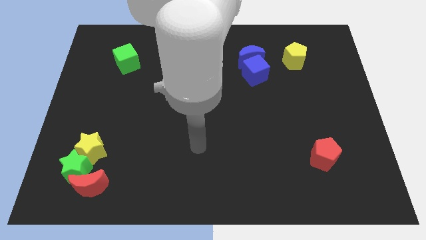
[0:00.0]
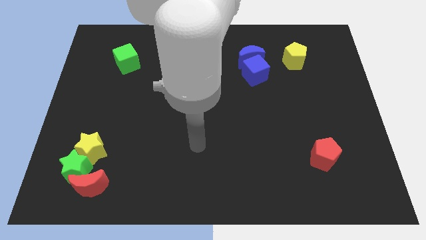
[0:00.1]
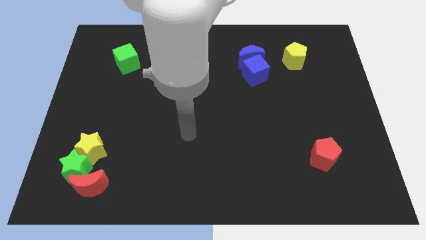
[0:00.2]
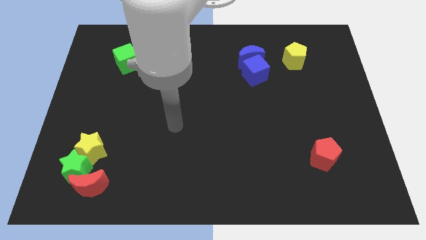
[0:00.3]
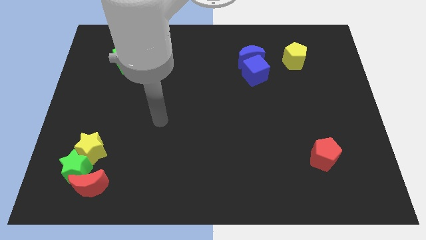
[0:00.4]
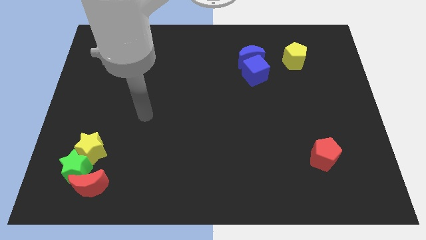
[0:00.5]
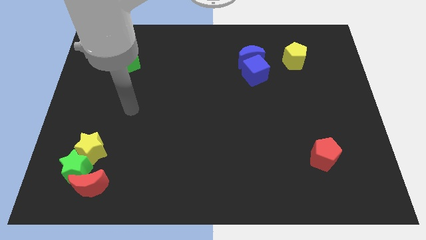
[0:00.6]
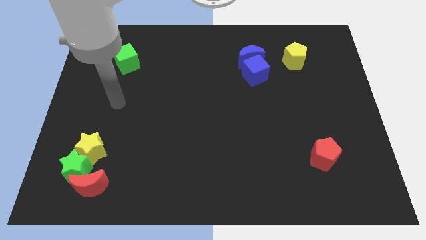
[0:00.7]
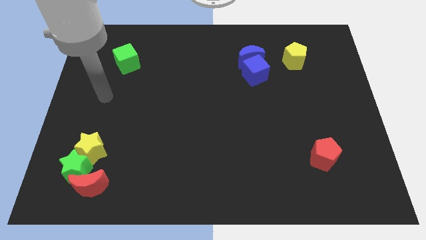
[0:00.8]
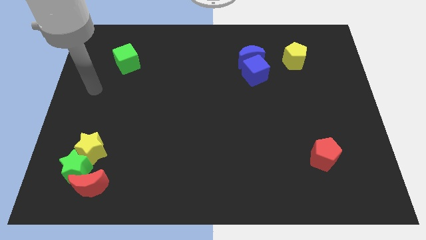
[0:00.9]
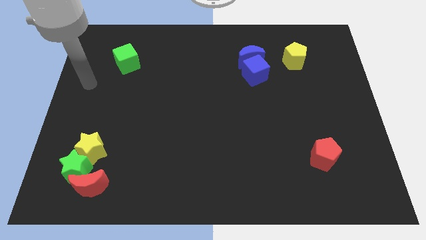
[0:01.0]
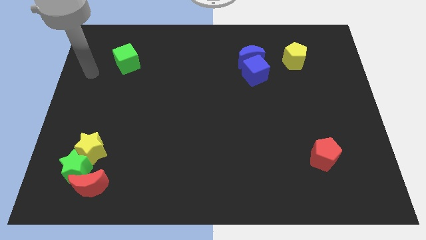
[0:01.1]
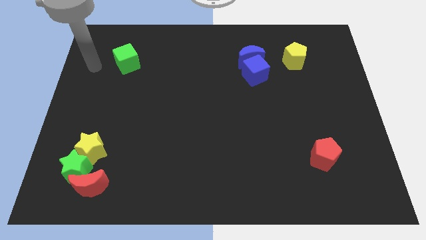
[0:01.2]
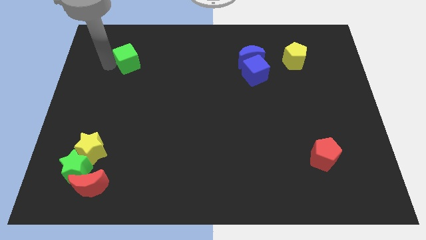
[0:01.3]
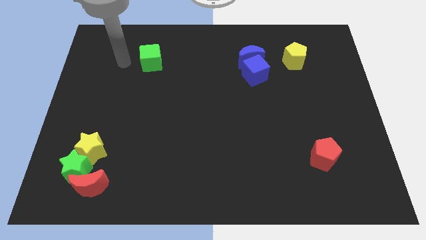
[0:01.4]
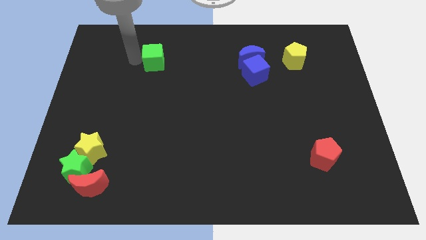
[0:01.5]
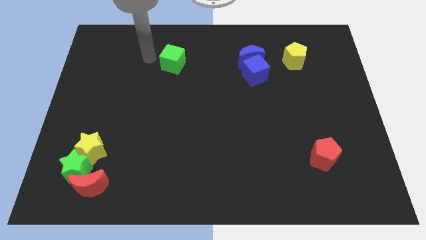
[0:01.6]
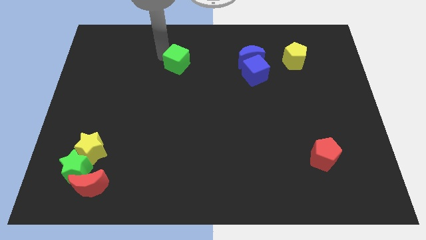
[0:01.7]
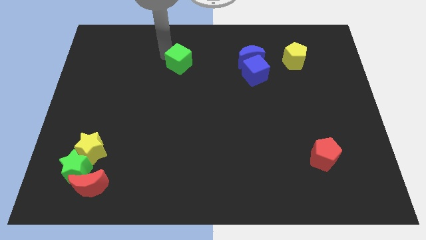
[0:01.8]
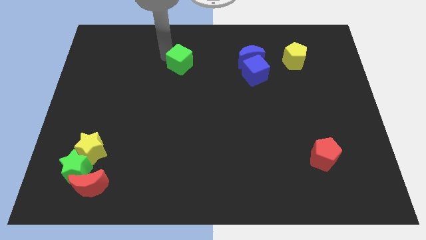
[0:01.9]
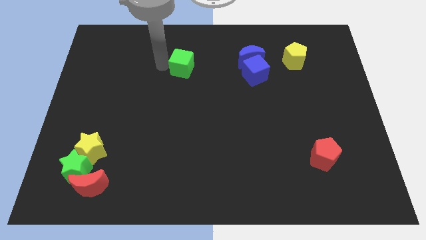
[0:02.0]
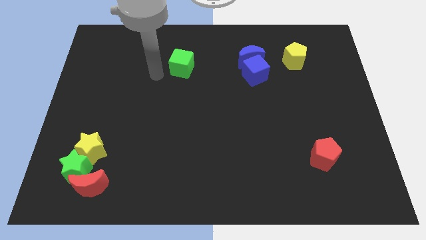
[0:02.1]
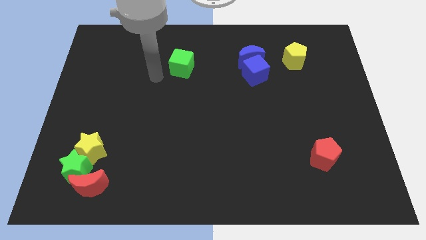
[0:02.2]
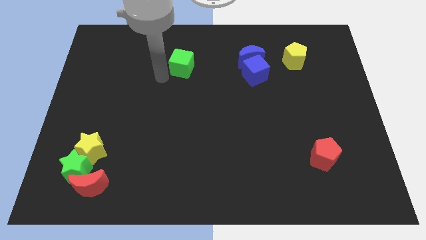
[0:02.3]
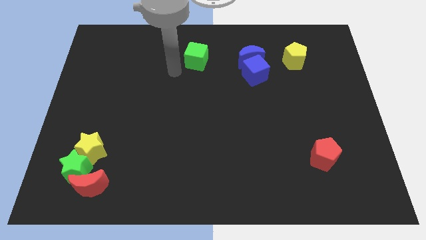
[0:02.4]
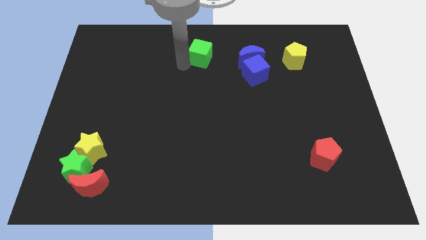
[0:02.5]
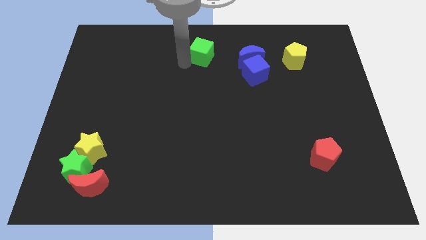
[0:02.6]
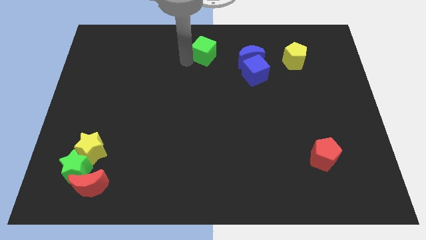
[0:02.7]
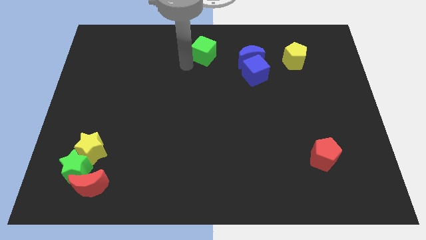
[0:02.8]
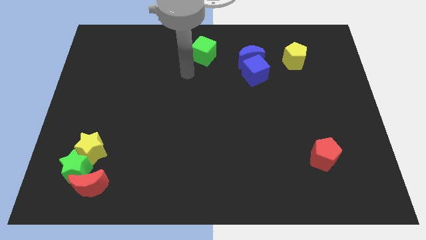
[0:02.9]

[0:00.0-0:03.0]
move the green cube to center top of the board

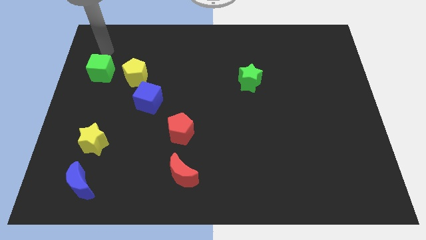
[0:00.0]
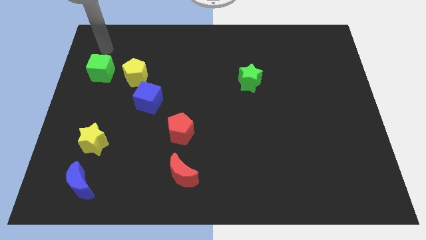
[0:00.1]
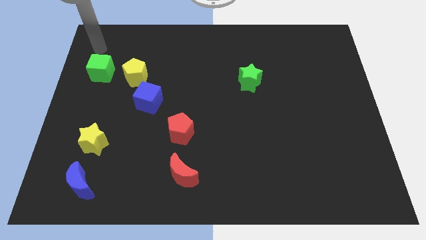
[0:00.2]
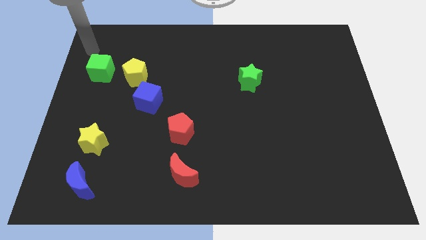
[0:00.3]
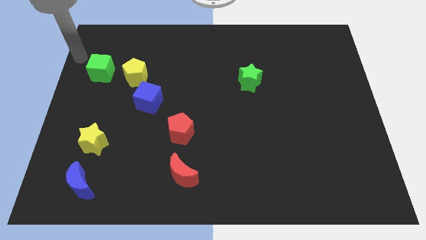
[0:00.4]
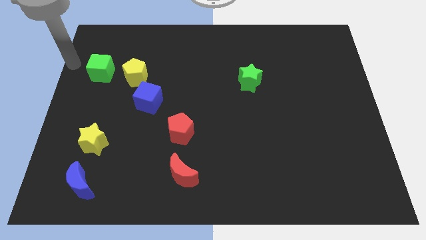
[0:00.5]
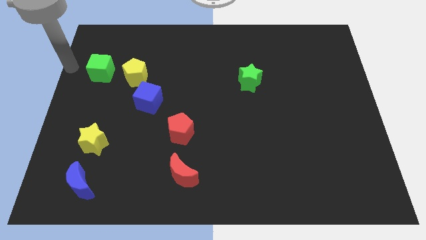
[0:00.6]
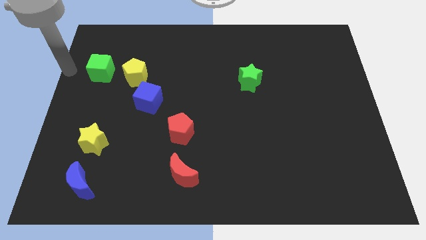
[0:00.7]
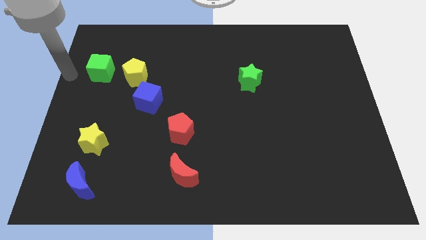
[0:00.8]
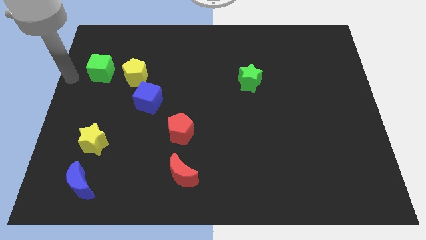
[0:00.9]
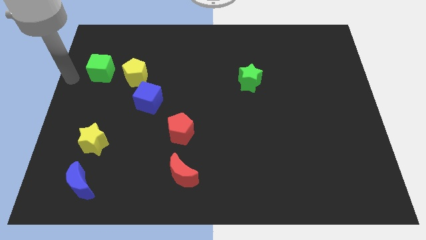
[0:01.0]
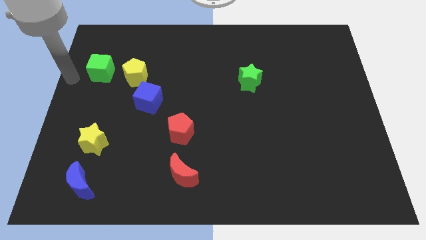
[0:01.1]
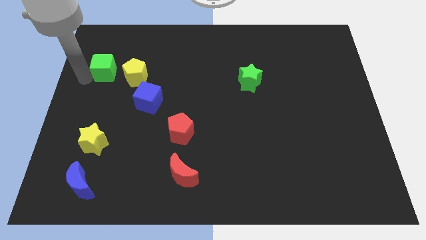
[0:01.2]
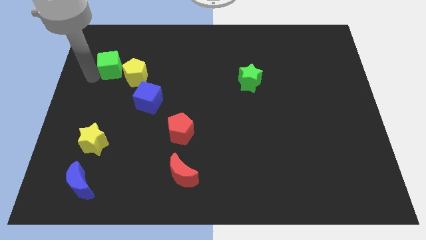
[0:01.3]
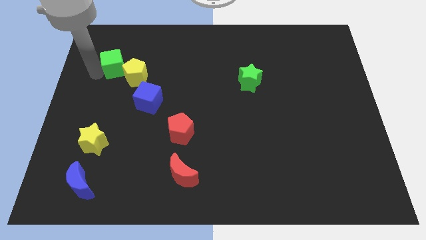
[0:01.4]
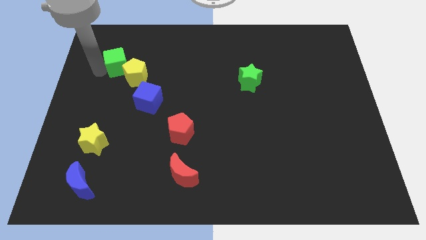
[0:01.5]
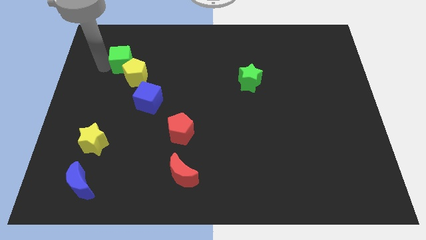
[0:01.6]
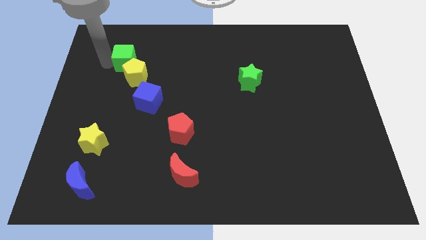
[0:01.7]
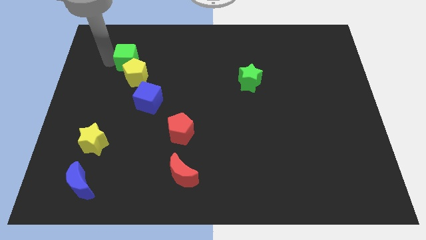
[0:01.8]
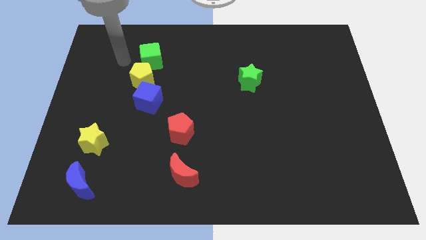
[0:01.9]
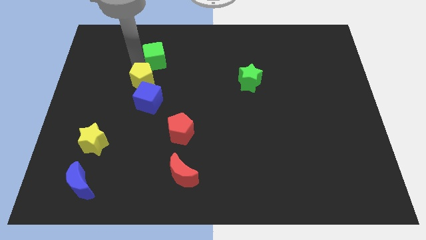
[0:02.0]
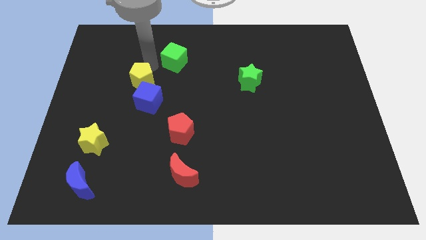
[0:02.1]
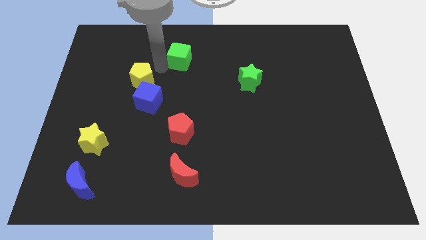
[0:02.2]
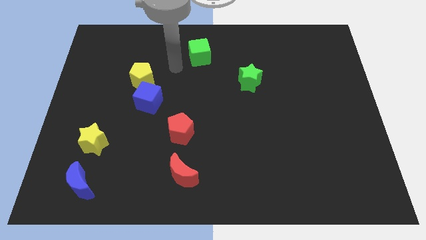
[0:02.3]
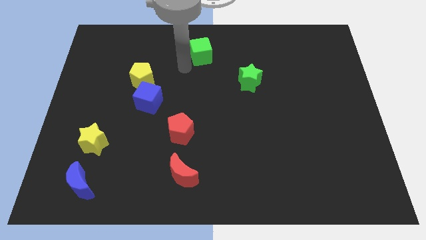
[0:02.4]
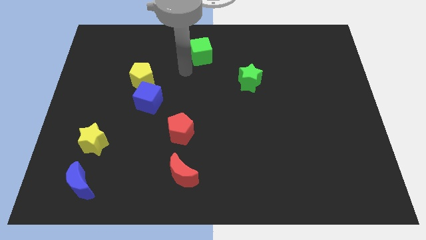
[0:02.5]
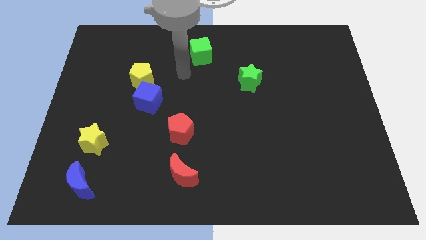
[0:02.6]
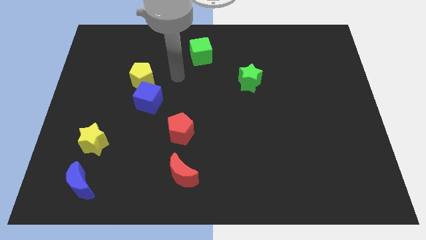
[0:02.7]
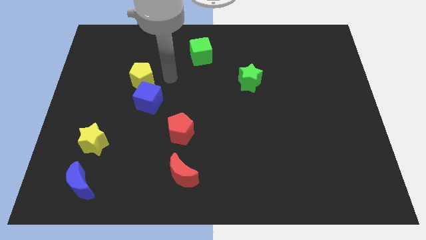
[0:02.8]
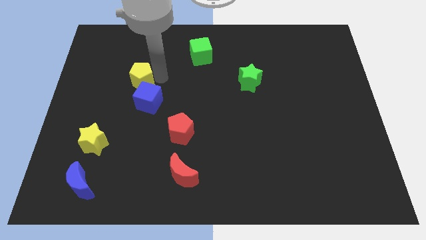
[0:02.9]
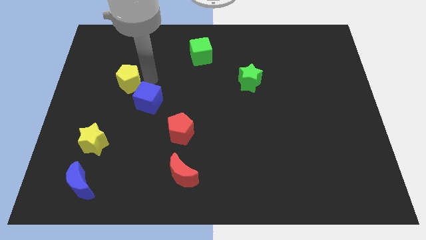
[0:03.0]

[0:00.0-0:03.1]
push the green cube to the top center of the board

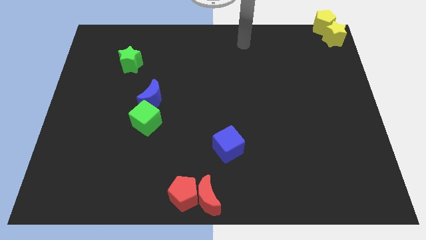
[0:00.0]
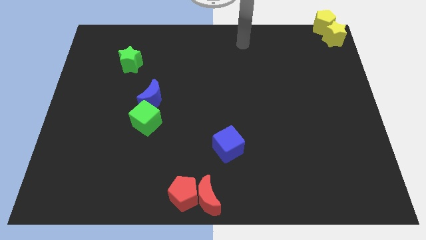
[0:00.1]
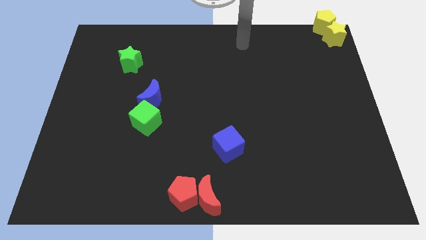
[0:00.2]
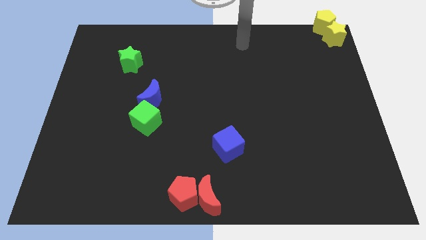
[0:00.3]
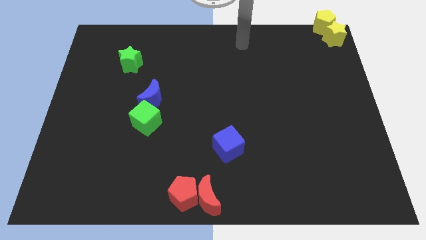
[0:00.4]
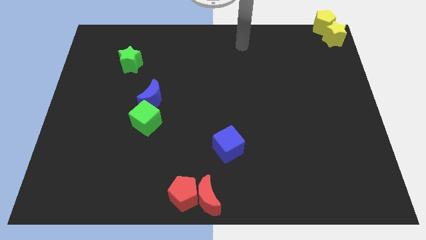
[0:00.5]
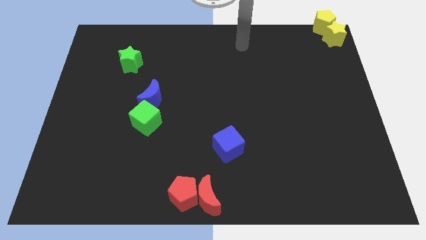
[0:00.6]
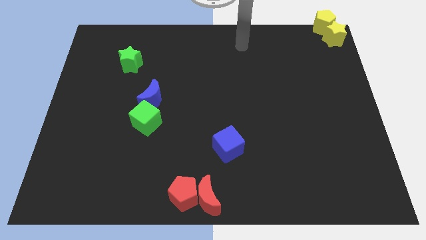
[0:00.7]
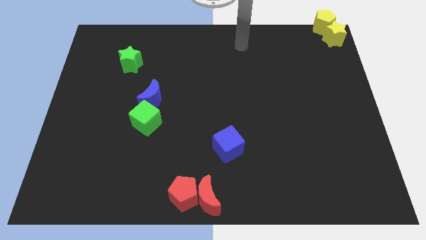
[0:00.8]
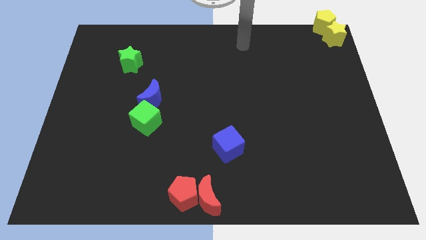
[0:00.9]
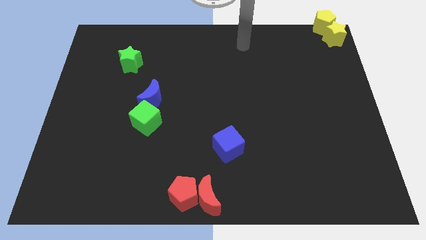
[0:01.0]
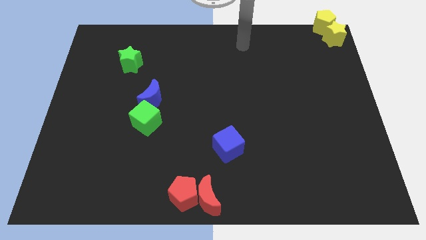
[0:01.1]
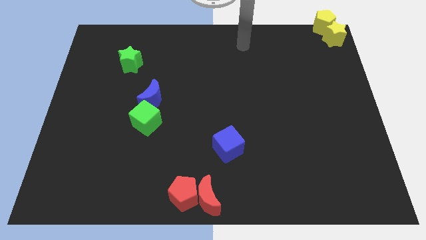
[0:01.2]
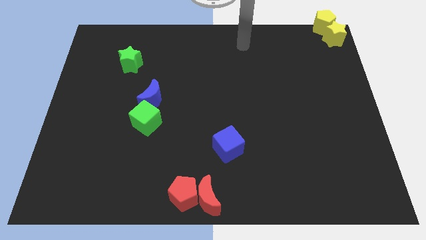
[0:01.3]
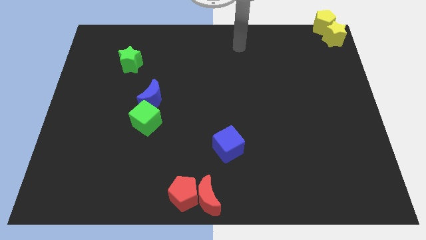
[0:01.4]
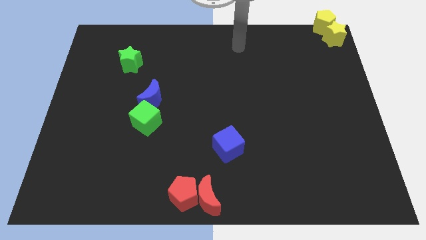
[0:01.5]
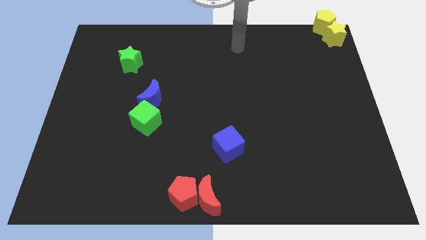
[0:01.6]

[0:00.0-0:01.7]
place the arm at the top center of the board

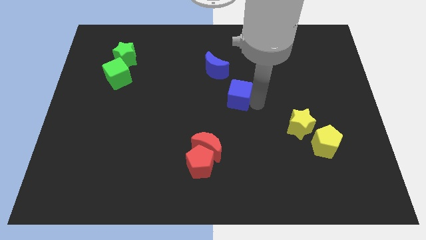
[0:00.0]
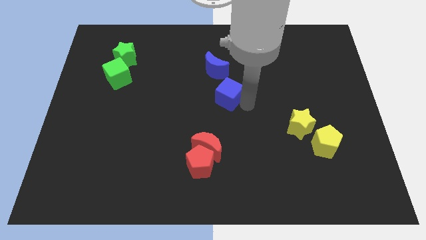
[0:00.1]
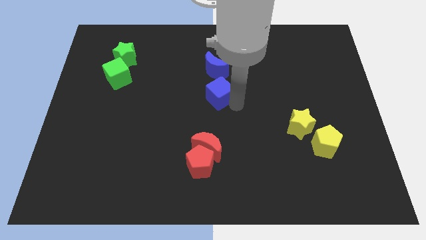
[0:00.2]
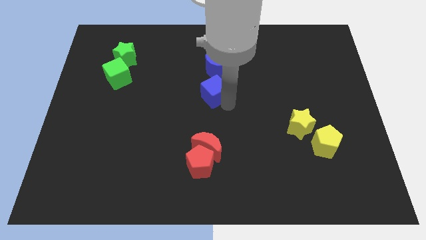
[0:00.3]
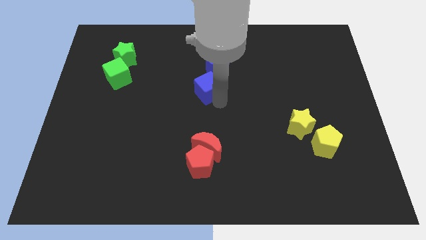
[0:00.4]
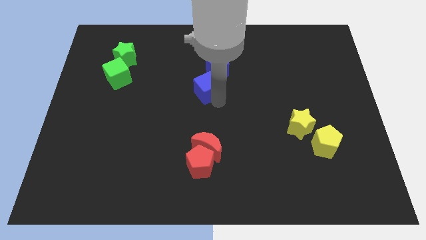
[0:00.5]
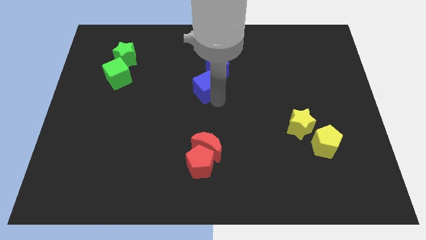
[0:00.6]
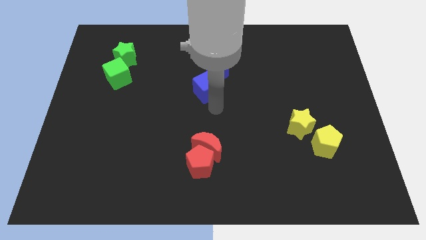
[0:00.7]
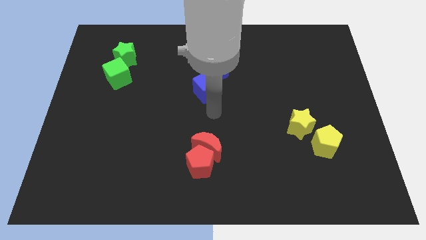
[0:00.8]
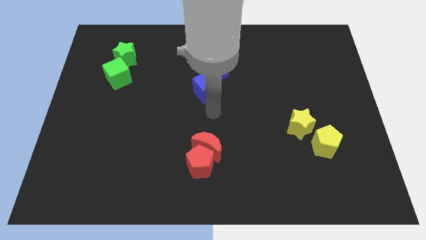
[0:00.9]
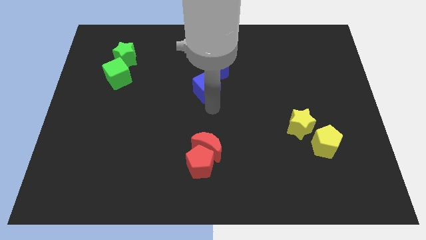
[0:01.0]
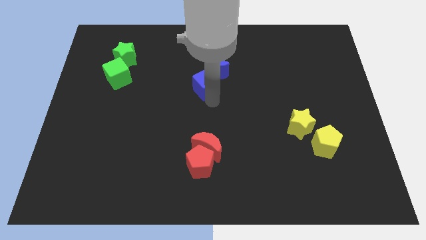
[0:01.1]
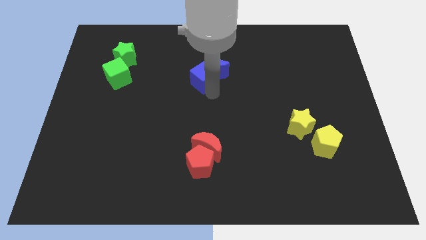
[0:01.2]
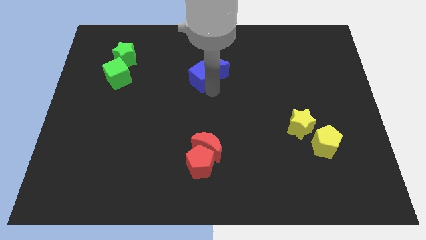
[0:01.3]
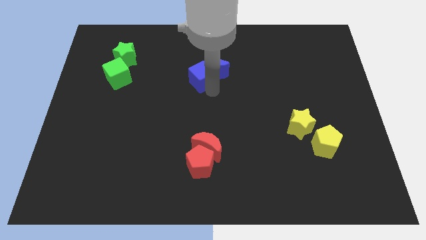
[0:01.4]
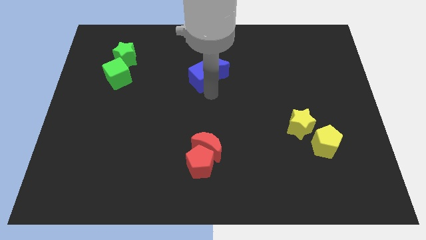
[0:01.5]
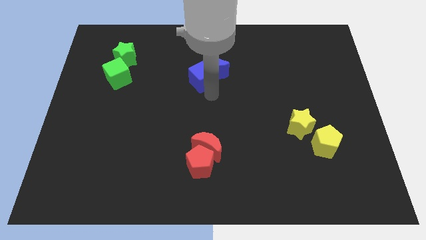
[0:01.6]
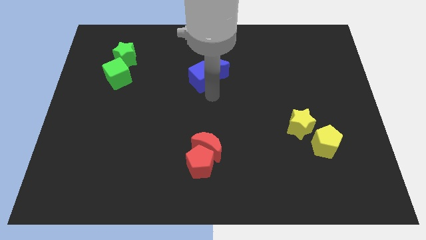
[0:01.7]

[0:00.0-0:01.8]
place the blue cube close to the blue moon
